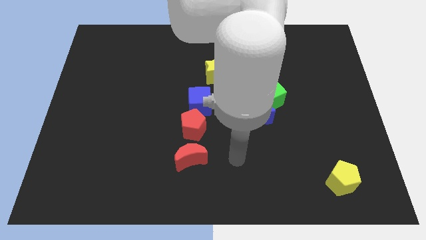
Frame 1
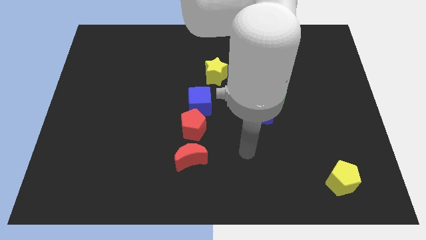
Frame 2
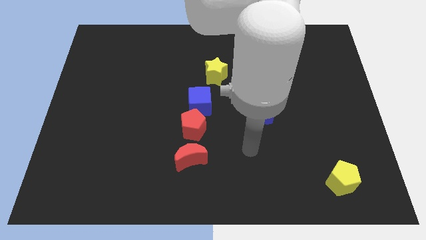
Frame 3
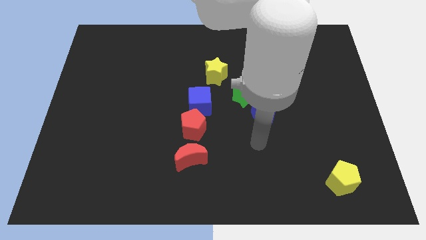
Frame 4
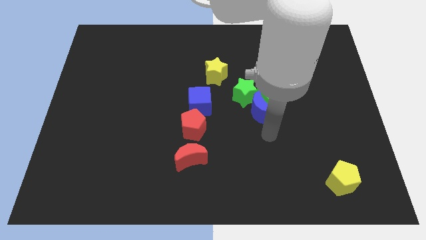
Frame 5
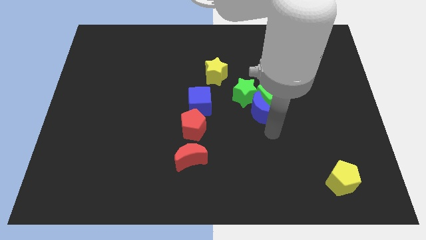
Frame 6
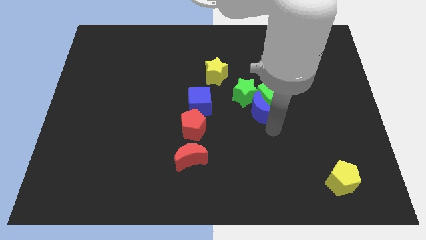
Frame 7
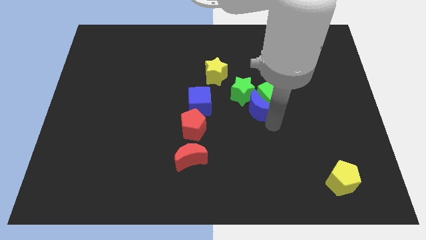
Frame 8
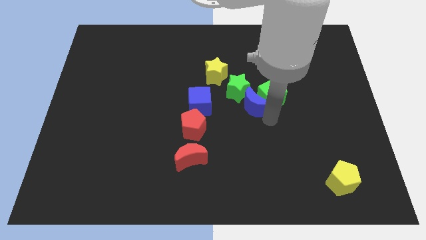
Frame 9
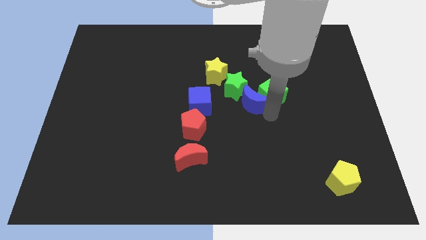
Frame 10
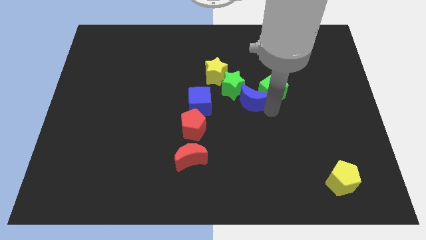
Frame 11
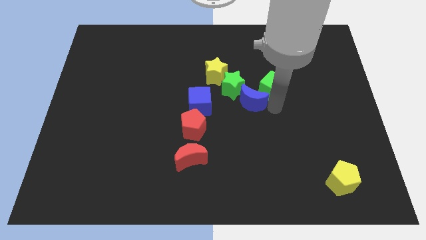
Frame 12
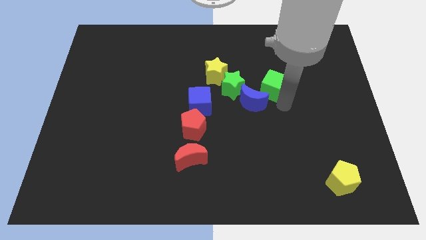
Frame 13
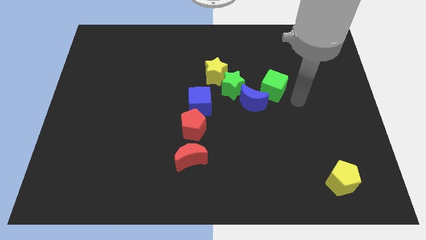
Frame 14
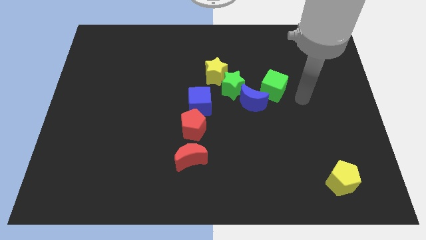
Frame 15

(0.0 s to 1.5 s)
push the blue moon and green cube upwards

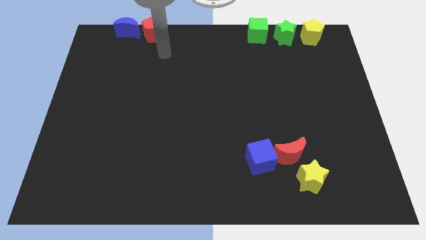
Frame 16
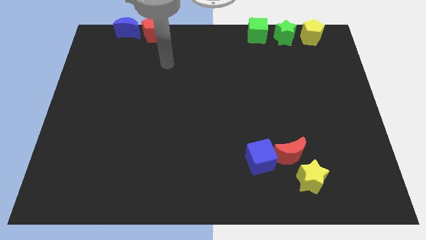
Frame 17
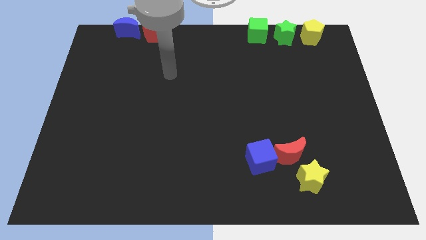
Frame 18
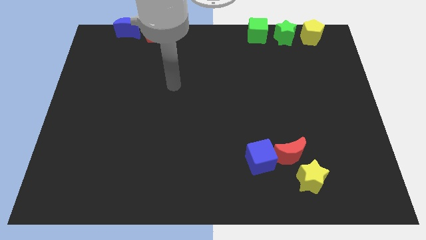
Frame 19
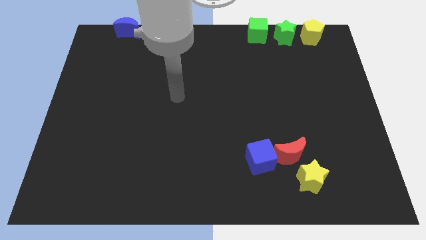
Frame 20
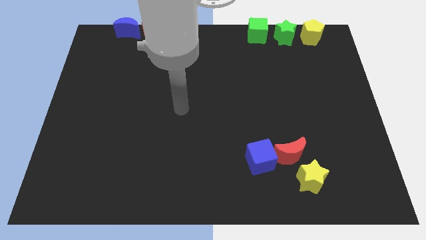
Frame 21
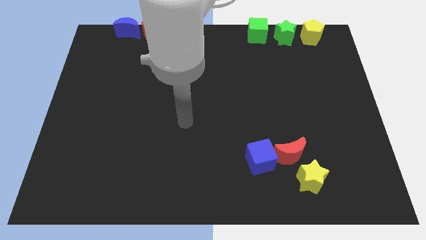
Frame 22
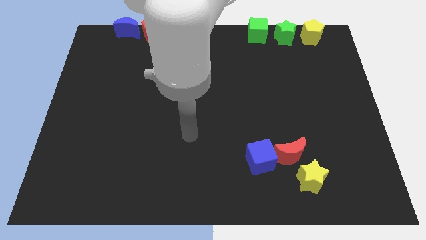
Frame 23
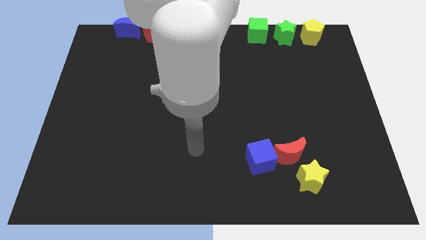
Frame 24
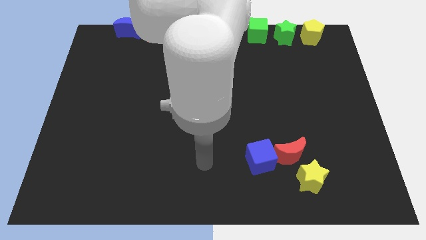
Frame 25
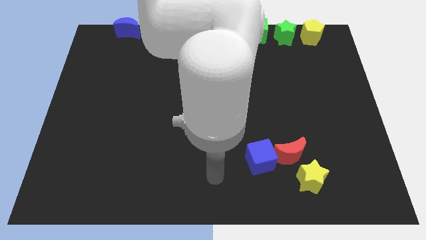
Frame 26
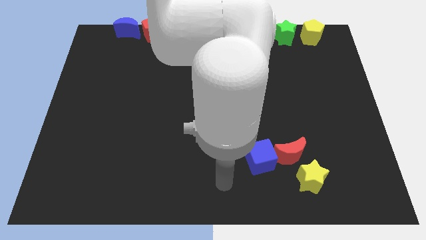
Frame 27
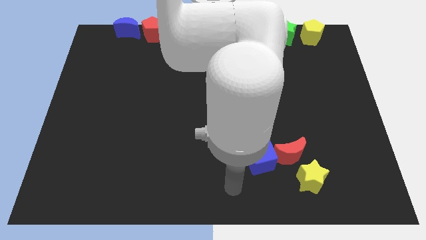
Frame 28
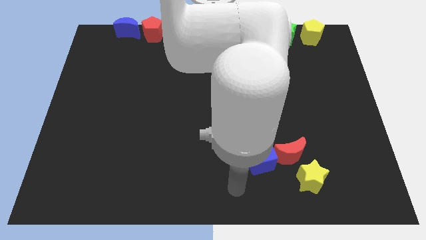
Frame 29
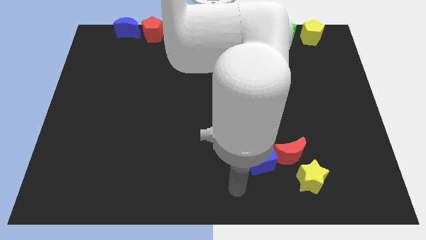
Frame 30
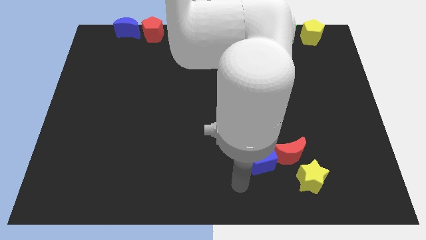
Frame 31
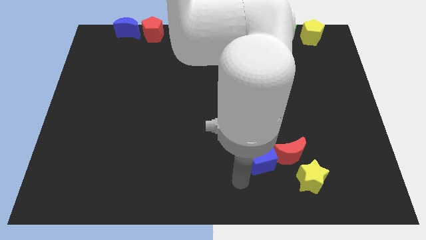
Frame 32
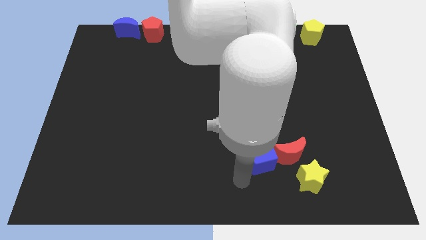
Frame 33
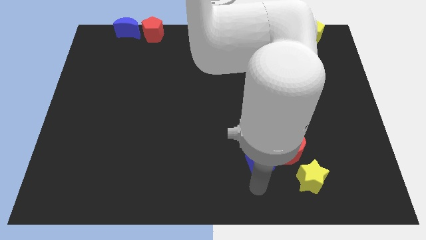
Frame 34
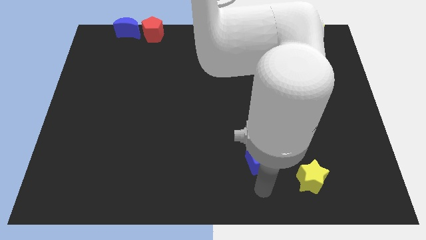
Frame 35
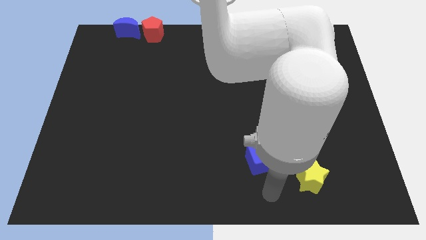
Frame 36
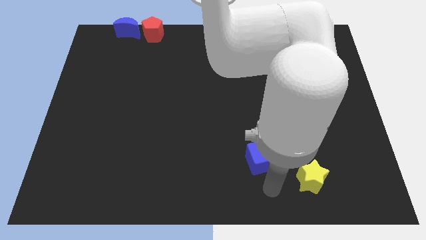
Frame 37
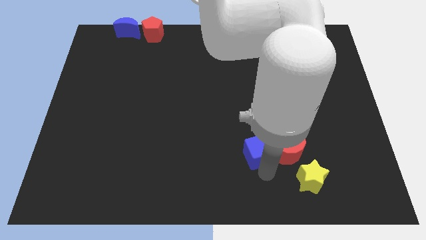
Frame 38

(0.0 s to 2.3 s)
move your arm to the bottom side of the blue cube

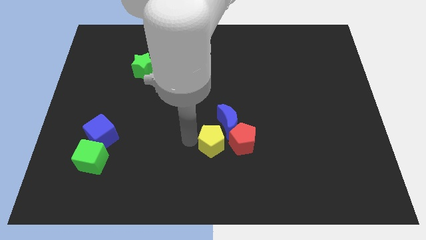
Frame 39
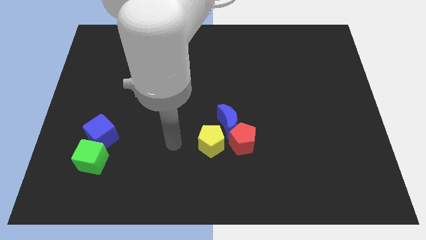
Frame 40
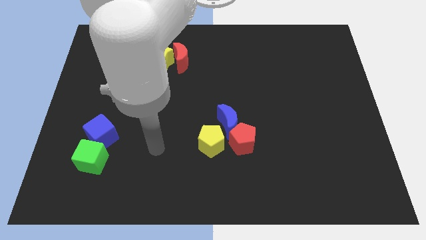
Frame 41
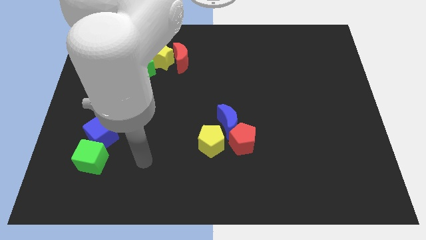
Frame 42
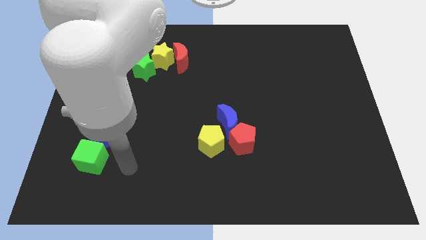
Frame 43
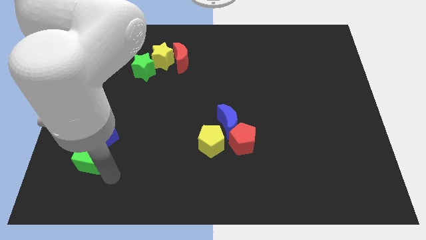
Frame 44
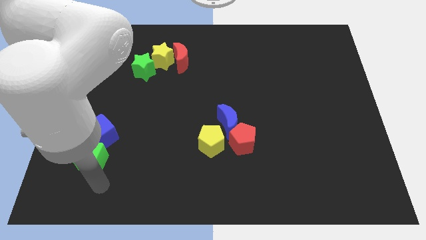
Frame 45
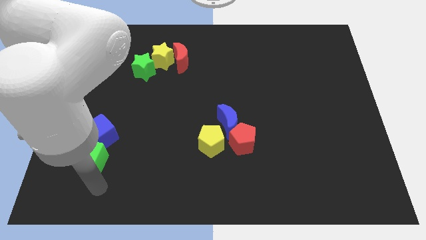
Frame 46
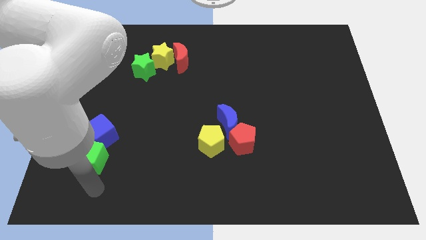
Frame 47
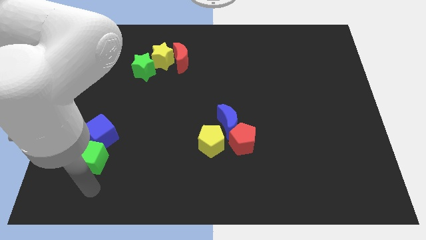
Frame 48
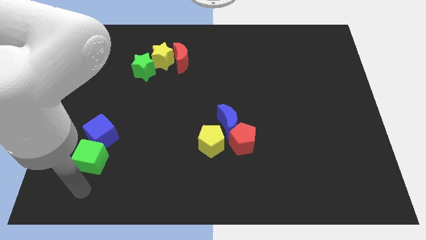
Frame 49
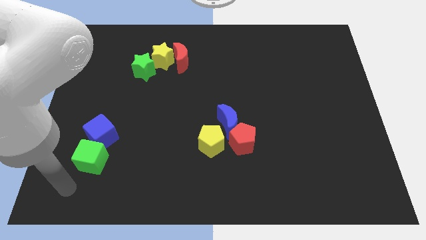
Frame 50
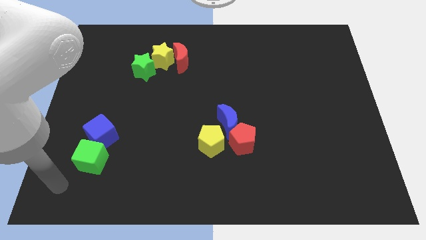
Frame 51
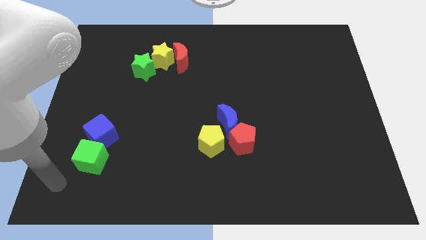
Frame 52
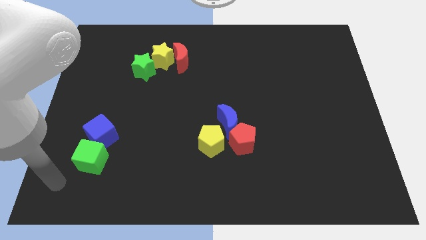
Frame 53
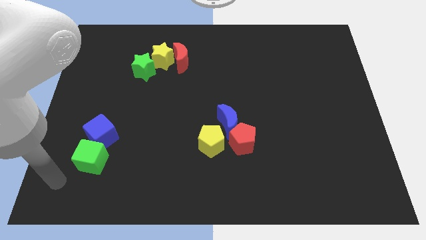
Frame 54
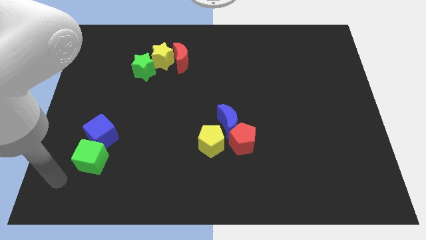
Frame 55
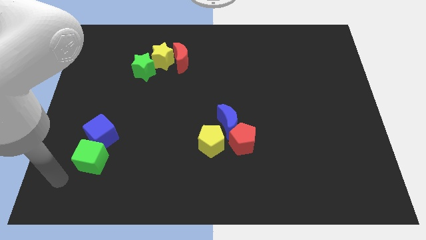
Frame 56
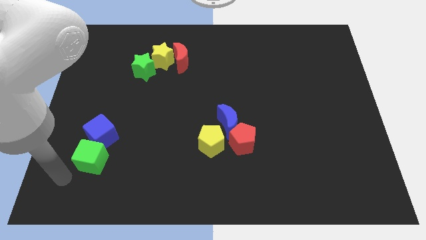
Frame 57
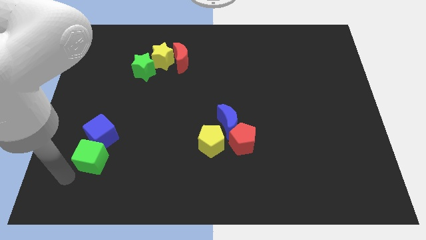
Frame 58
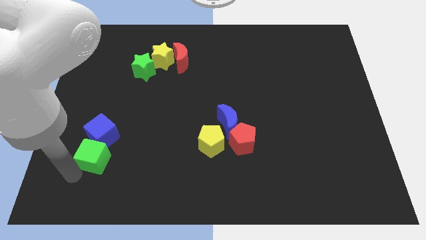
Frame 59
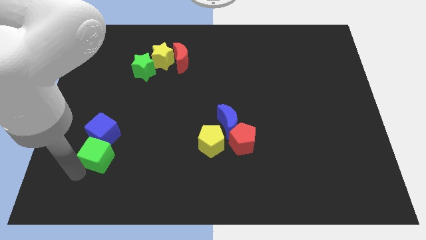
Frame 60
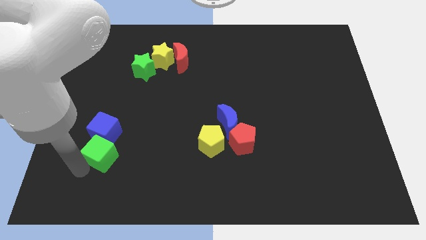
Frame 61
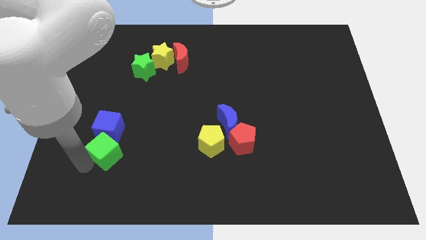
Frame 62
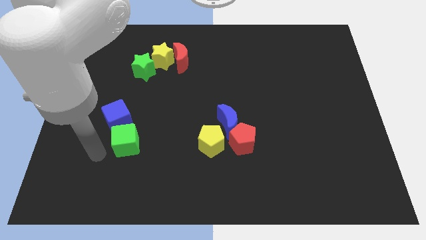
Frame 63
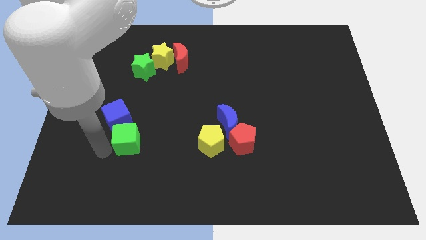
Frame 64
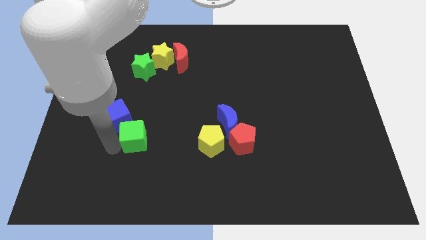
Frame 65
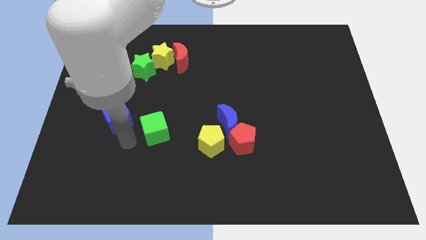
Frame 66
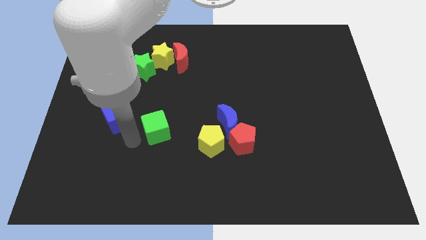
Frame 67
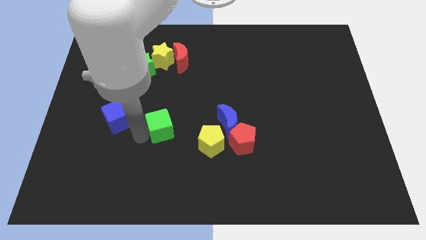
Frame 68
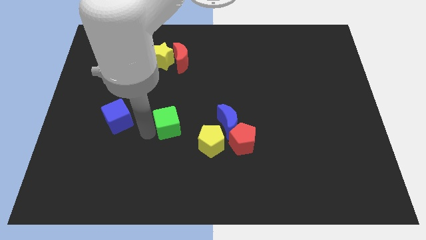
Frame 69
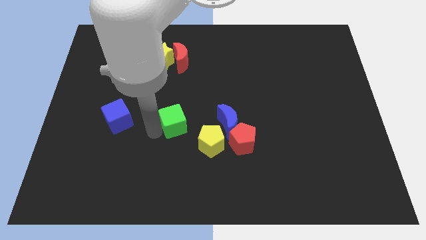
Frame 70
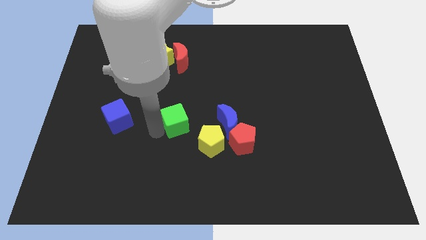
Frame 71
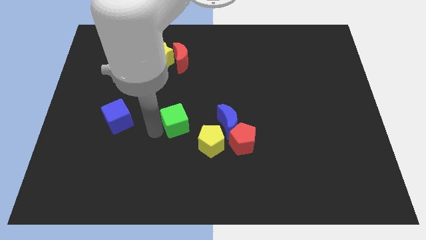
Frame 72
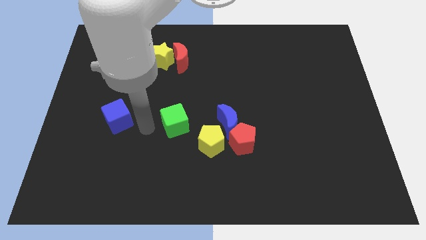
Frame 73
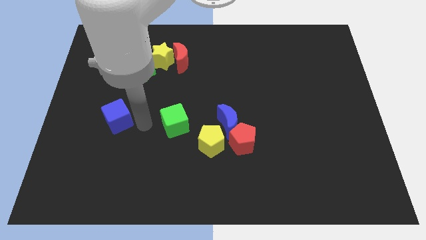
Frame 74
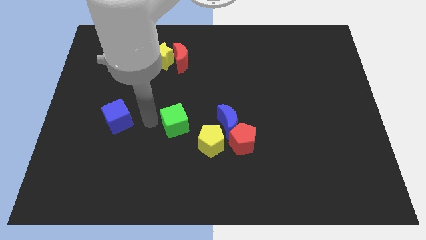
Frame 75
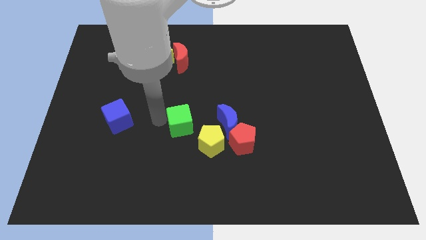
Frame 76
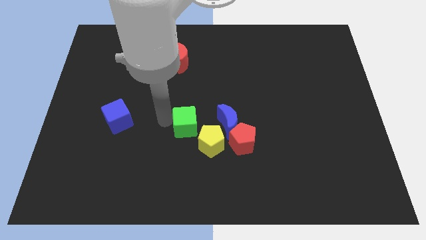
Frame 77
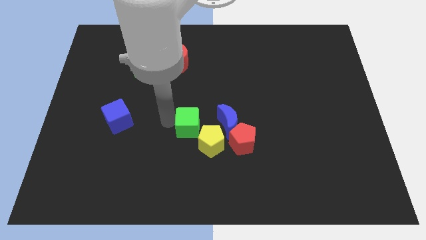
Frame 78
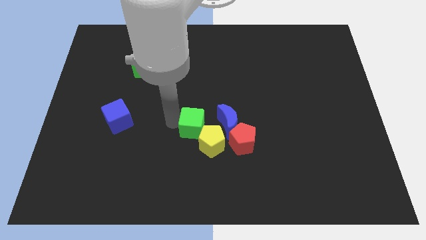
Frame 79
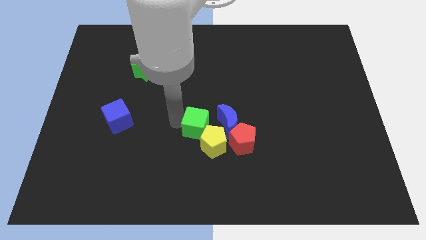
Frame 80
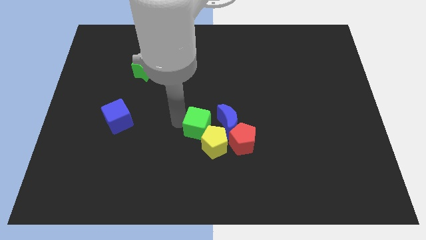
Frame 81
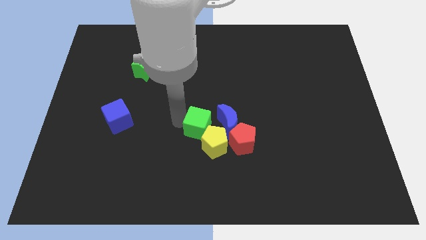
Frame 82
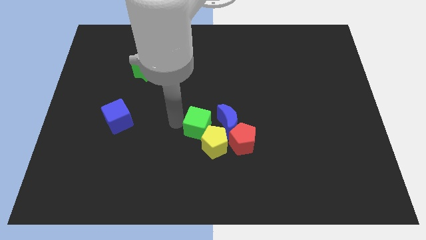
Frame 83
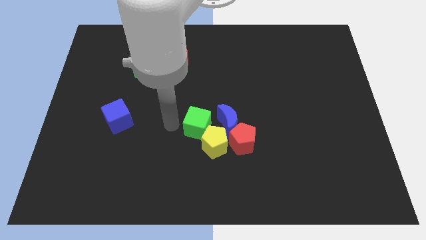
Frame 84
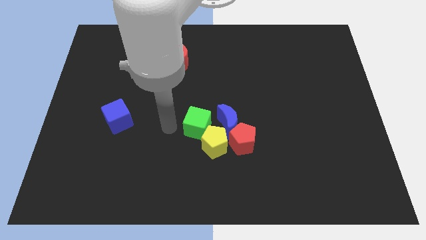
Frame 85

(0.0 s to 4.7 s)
place the green cube above the yellow pentagon

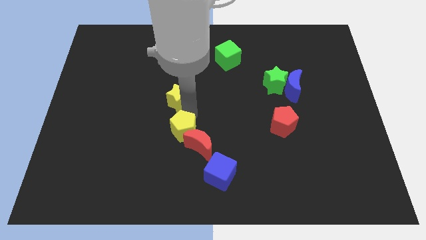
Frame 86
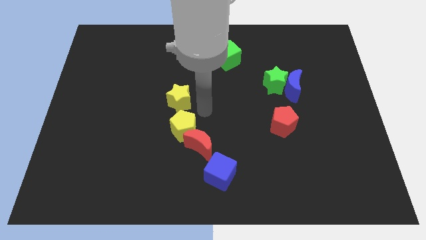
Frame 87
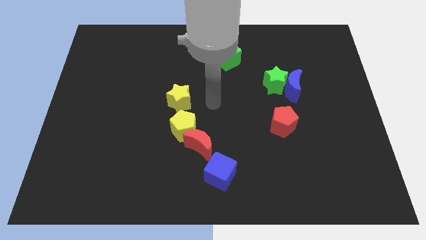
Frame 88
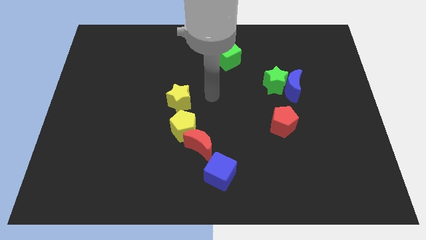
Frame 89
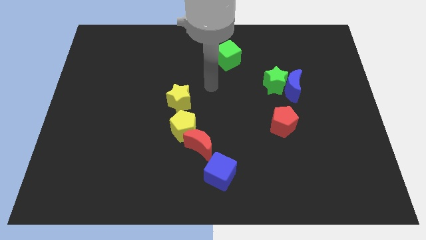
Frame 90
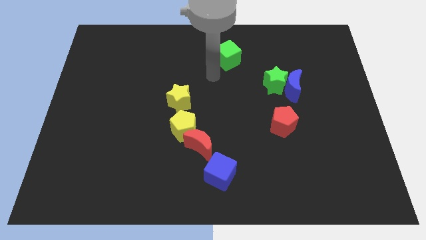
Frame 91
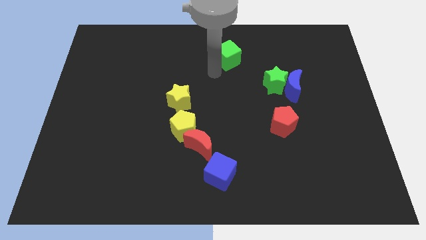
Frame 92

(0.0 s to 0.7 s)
move the arm away from the yellow blocks
